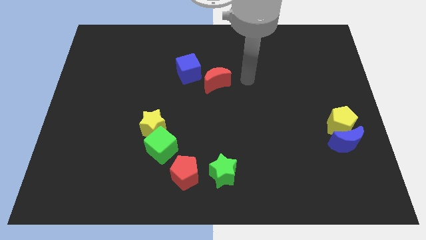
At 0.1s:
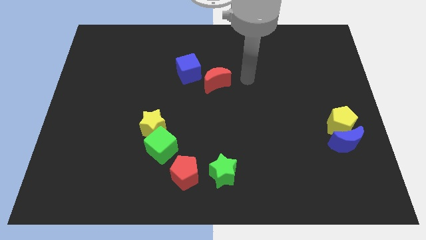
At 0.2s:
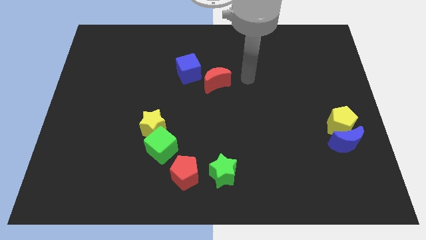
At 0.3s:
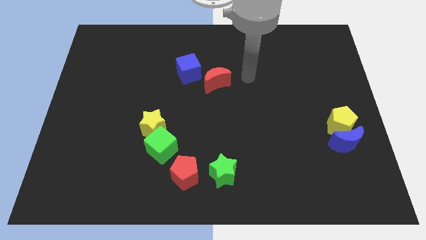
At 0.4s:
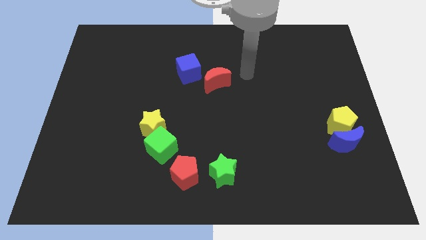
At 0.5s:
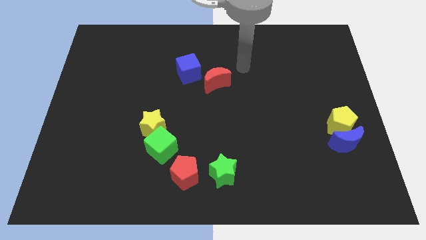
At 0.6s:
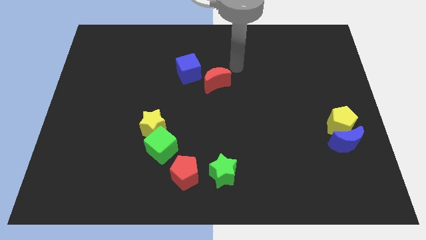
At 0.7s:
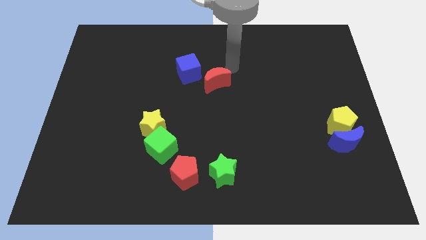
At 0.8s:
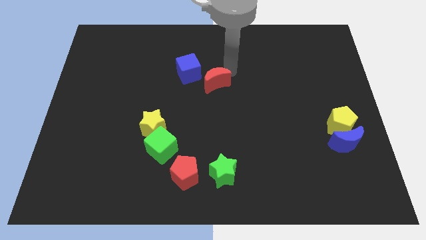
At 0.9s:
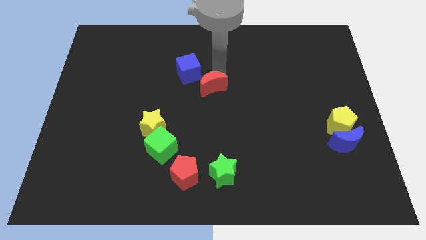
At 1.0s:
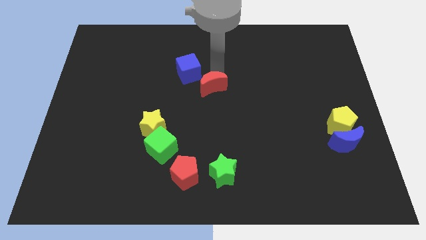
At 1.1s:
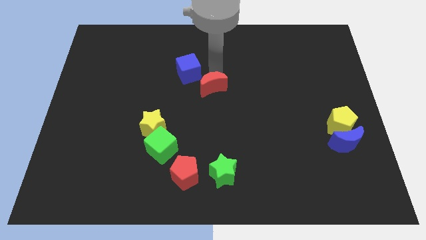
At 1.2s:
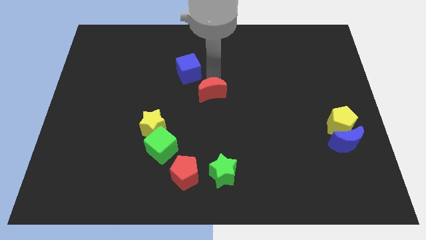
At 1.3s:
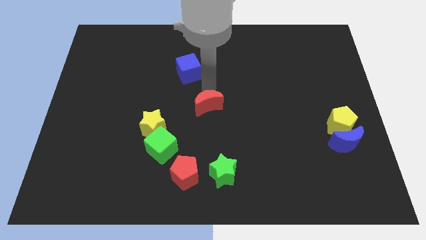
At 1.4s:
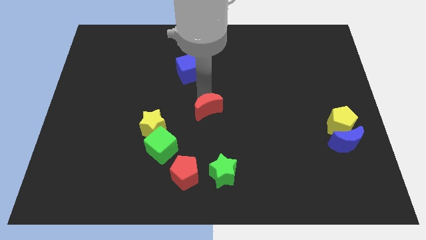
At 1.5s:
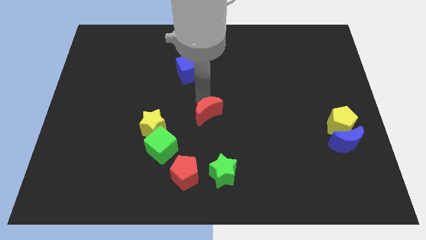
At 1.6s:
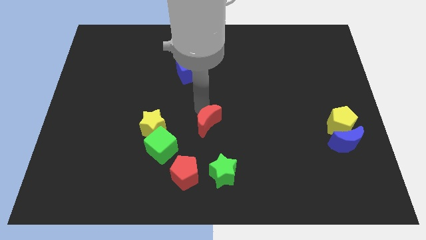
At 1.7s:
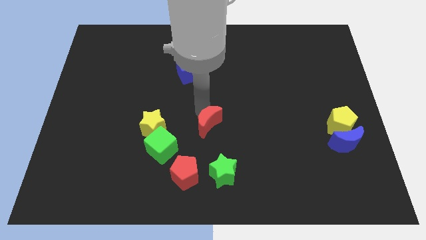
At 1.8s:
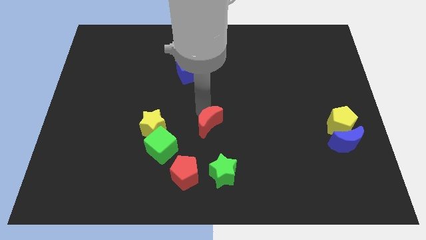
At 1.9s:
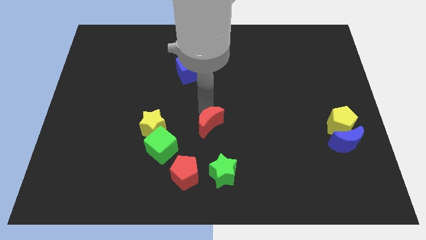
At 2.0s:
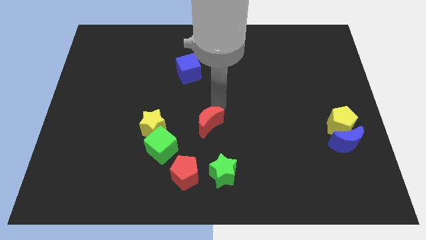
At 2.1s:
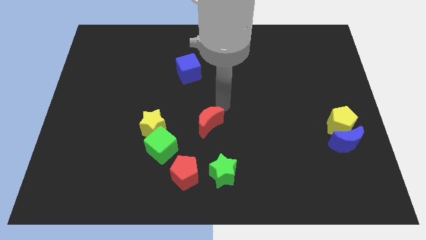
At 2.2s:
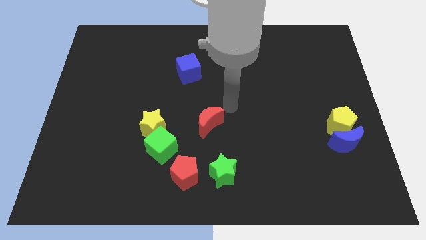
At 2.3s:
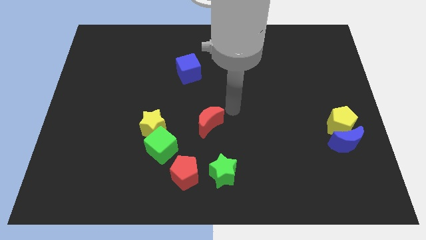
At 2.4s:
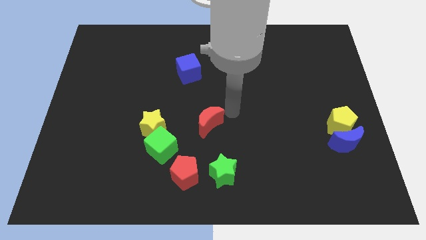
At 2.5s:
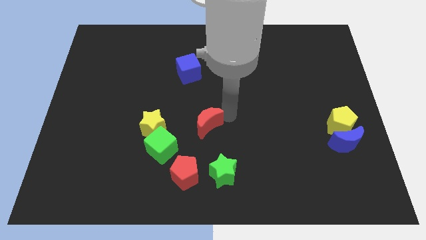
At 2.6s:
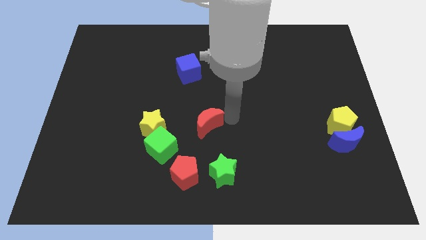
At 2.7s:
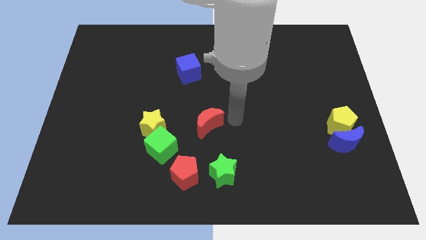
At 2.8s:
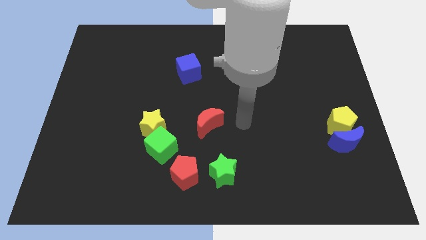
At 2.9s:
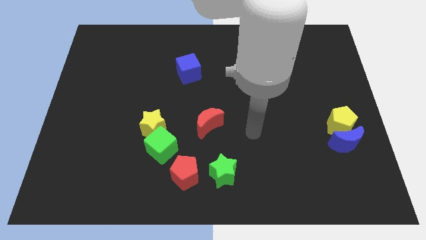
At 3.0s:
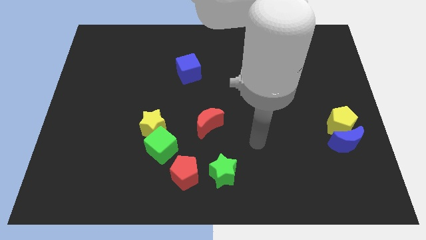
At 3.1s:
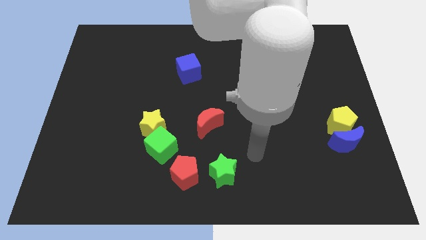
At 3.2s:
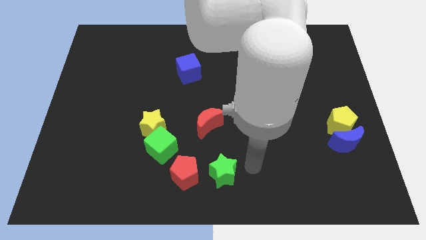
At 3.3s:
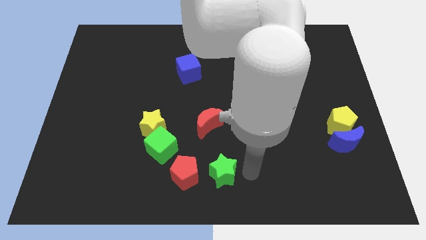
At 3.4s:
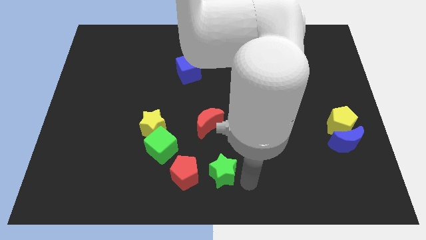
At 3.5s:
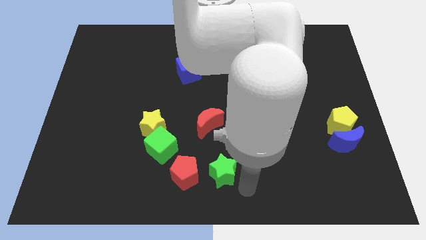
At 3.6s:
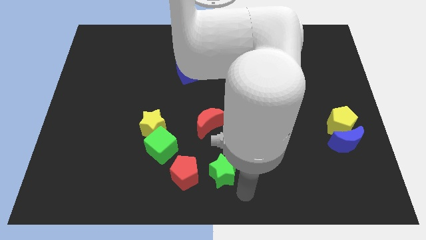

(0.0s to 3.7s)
place the red moon in between the blue cube and the green star

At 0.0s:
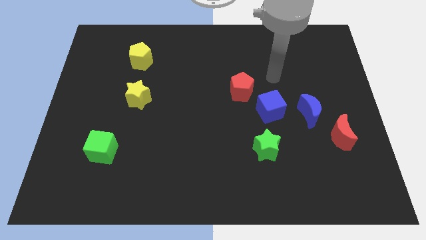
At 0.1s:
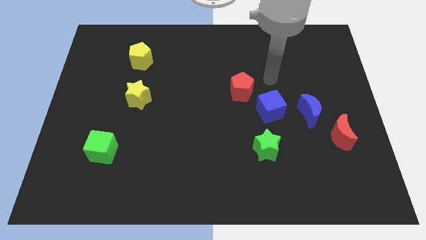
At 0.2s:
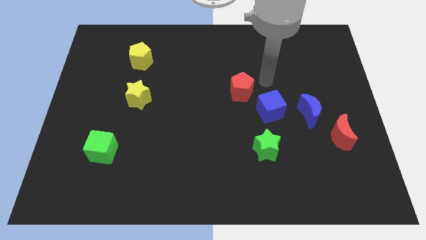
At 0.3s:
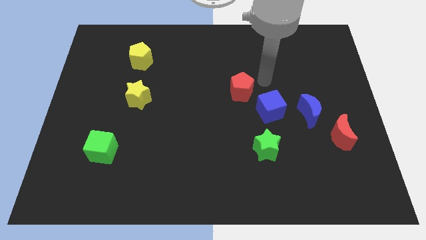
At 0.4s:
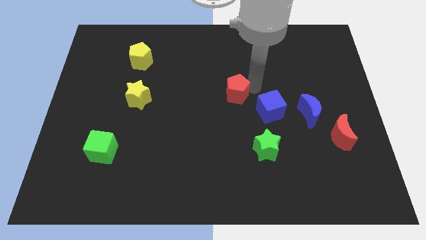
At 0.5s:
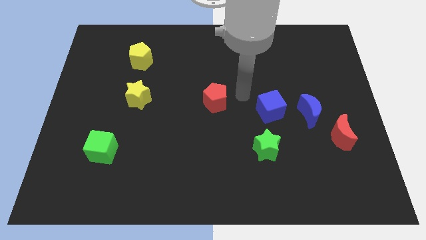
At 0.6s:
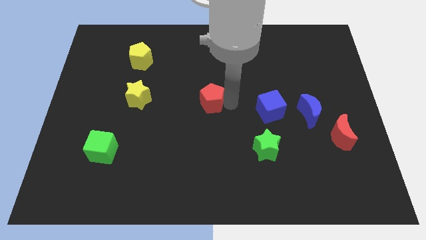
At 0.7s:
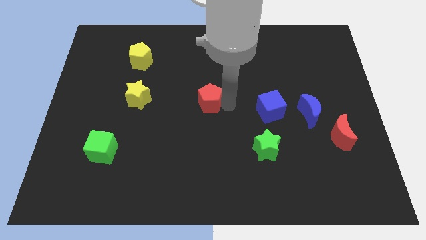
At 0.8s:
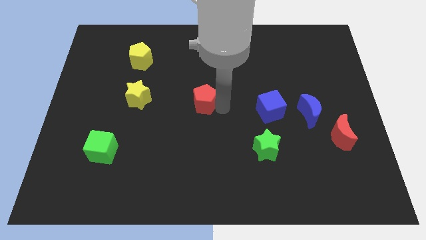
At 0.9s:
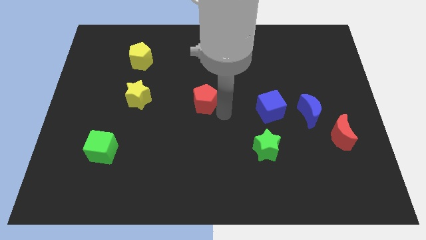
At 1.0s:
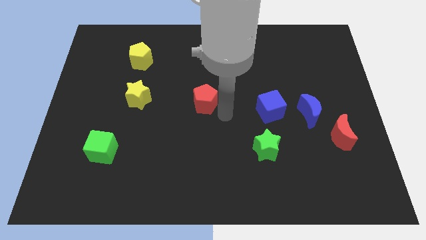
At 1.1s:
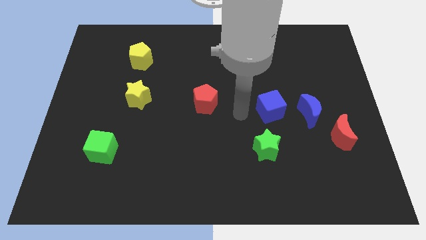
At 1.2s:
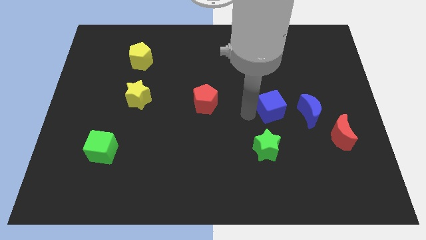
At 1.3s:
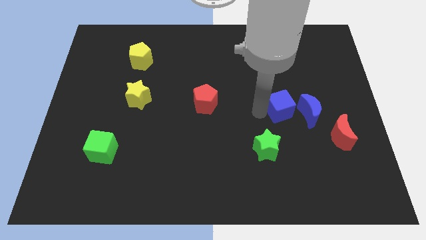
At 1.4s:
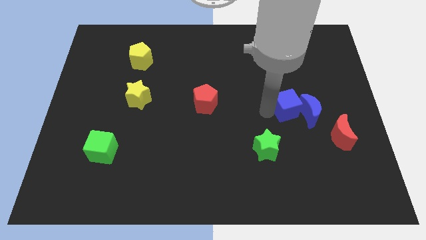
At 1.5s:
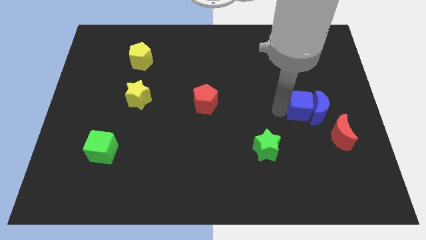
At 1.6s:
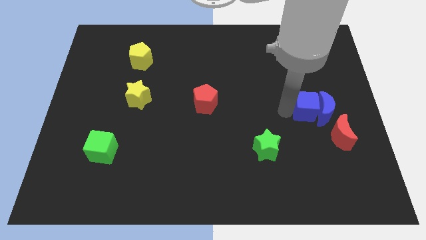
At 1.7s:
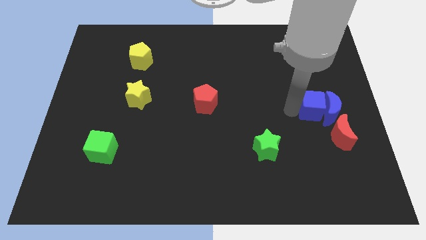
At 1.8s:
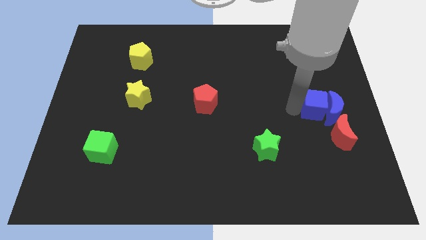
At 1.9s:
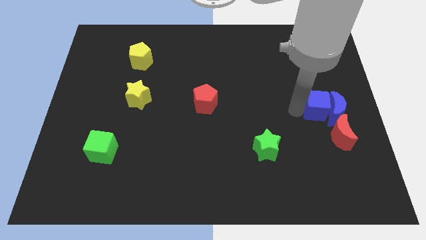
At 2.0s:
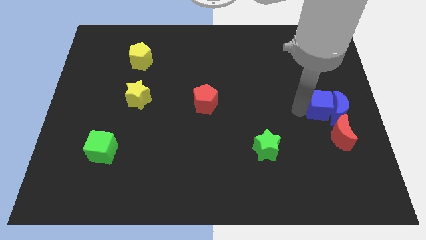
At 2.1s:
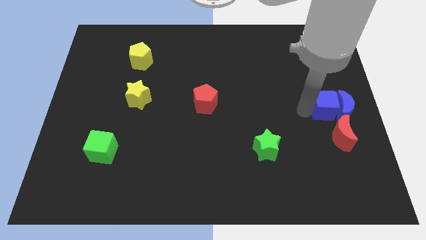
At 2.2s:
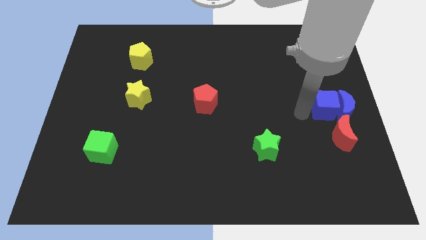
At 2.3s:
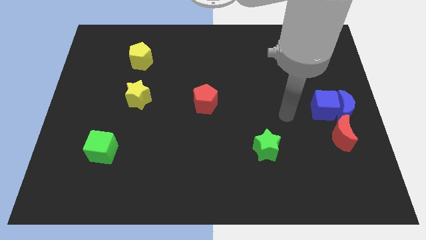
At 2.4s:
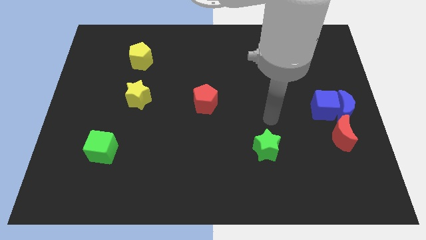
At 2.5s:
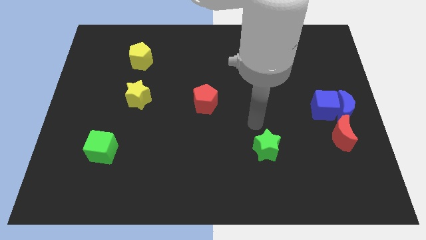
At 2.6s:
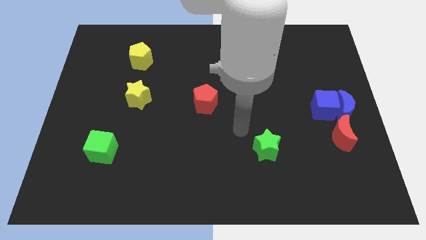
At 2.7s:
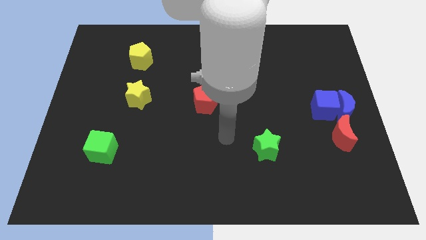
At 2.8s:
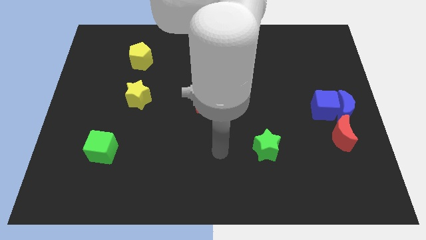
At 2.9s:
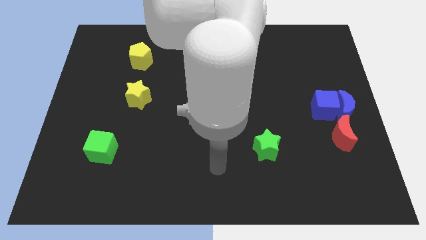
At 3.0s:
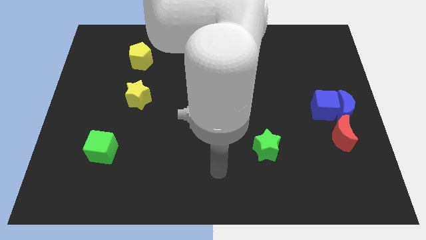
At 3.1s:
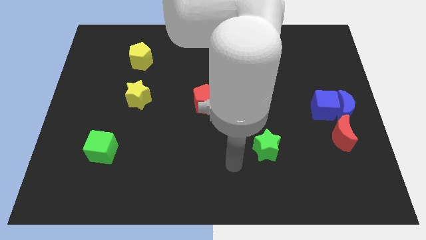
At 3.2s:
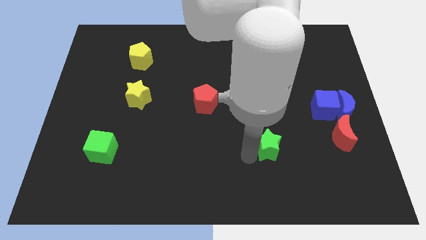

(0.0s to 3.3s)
separate red pentagon and the blue cube

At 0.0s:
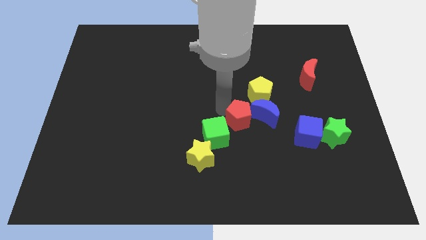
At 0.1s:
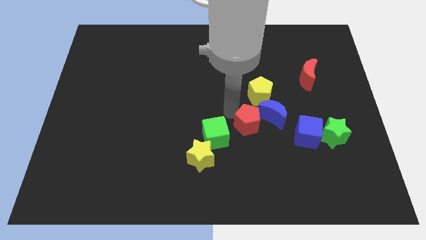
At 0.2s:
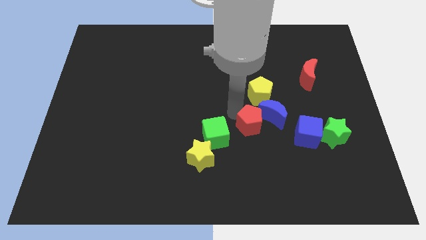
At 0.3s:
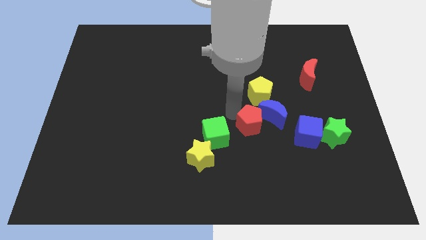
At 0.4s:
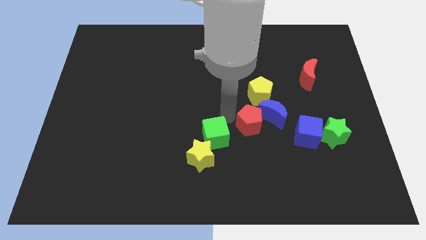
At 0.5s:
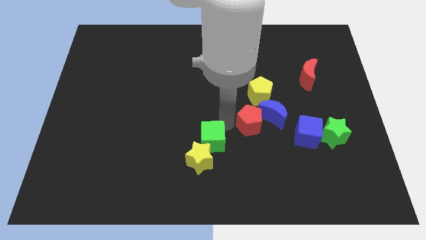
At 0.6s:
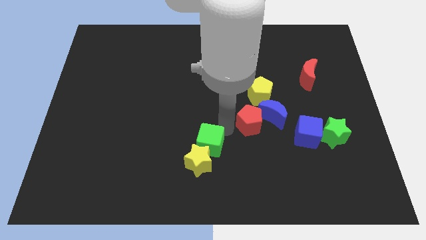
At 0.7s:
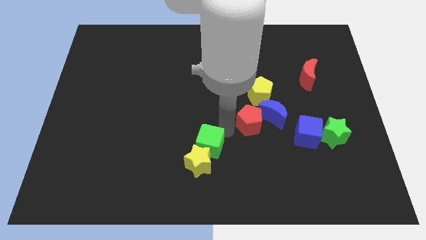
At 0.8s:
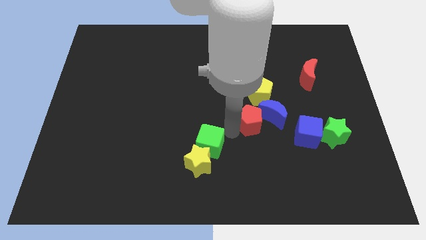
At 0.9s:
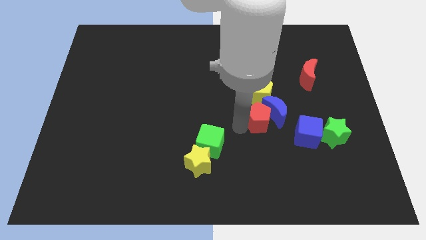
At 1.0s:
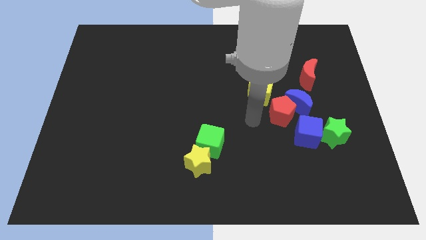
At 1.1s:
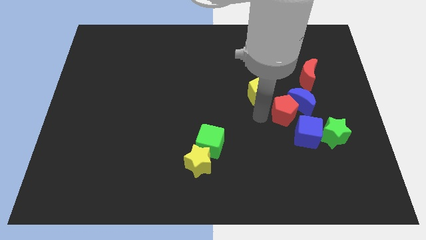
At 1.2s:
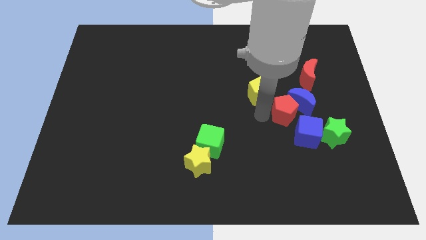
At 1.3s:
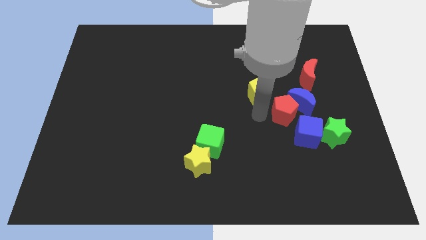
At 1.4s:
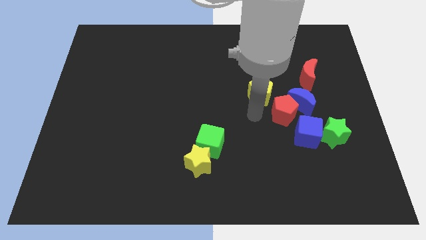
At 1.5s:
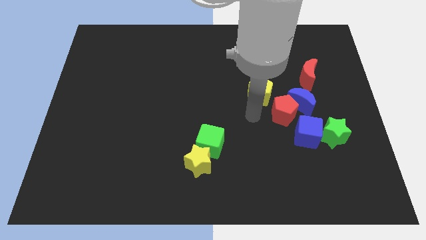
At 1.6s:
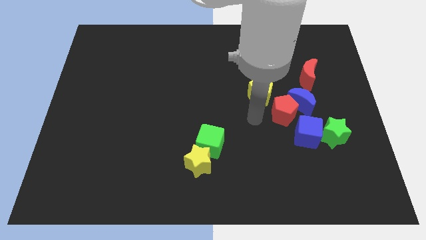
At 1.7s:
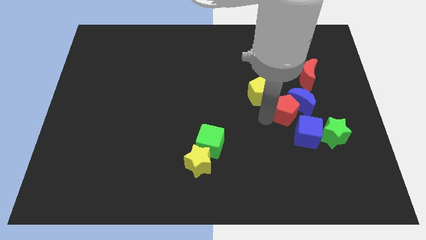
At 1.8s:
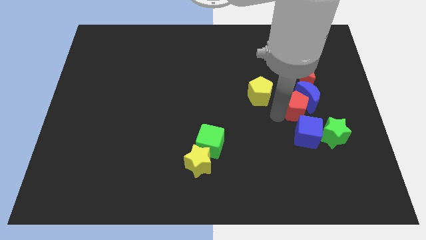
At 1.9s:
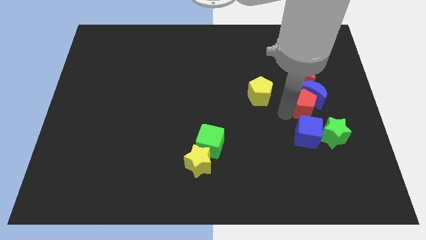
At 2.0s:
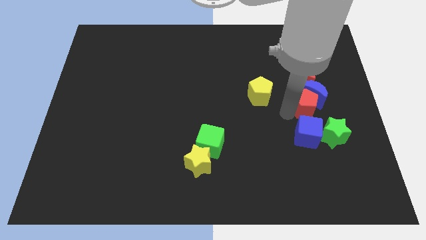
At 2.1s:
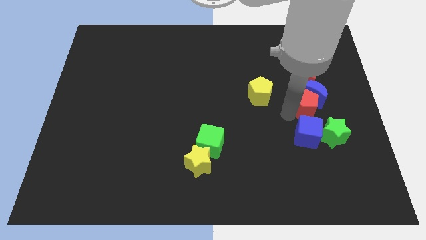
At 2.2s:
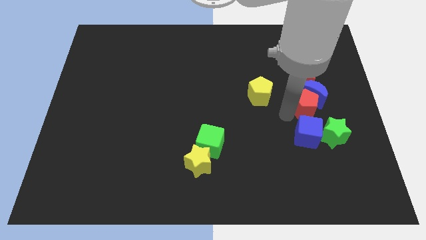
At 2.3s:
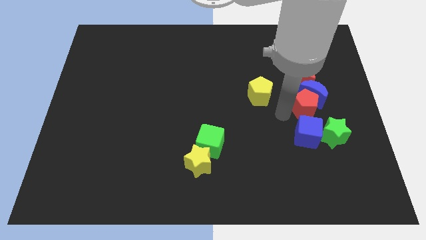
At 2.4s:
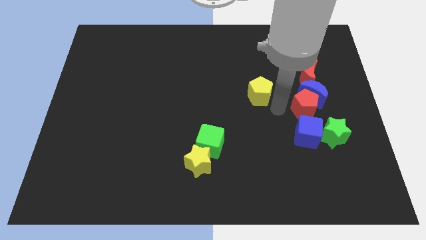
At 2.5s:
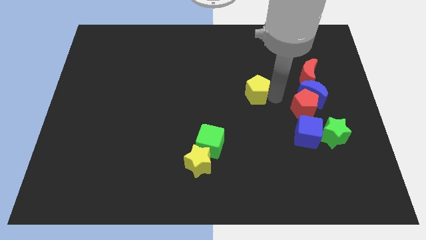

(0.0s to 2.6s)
place the red pentagon along with blue crescent under the red rescent
